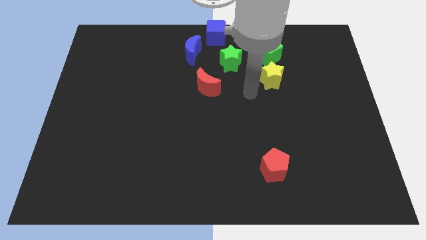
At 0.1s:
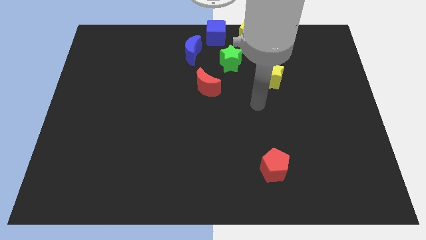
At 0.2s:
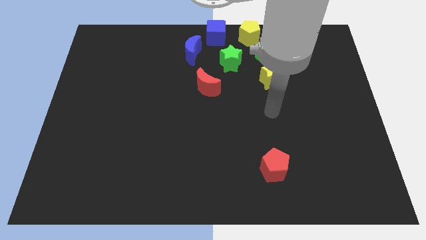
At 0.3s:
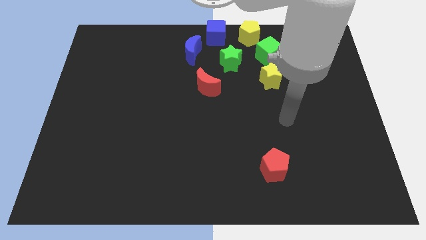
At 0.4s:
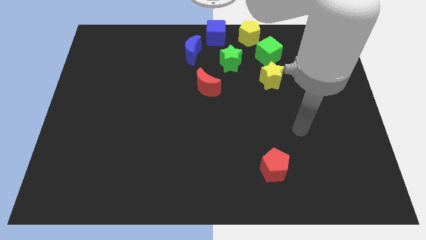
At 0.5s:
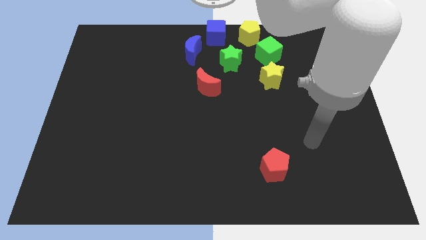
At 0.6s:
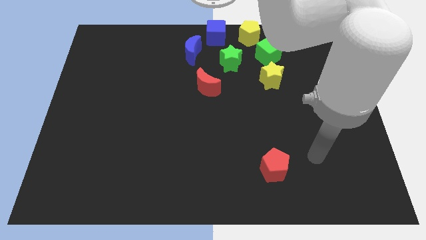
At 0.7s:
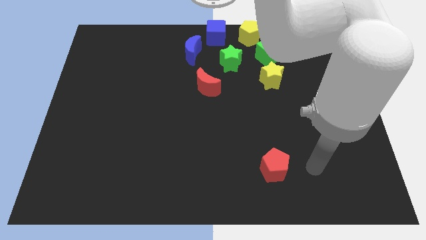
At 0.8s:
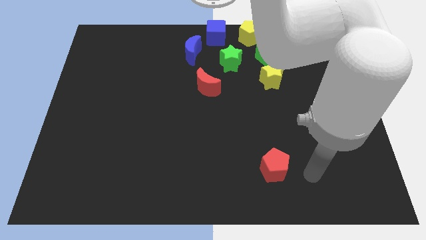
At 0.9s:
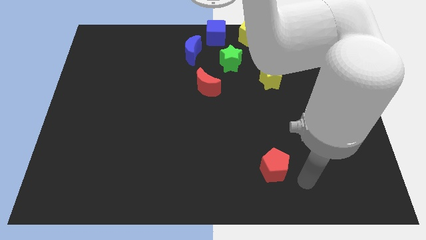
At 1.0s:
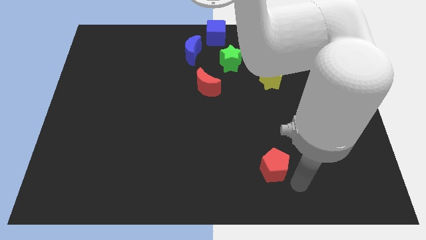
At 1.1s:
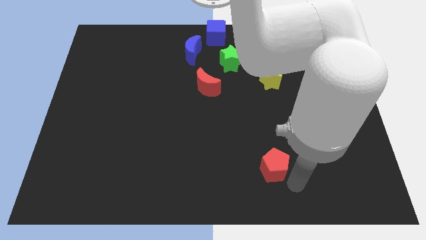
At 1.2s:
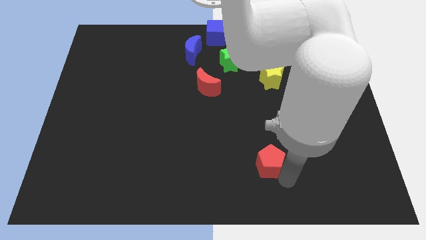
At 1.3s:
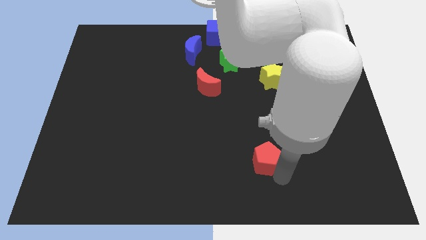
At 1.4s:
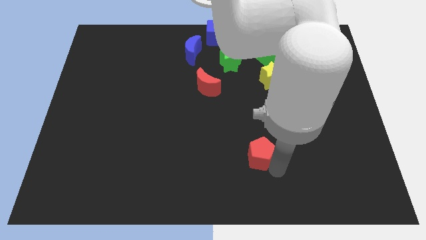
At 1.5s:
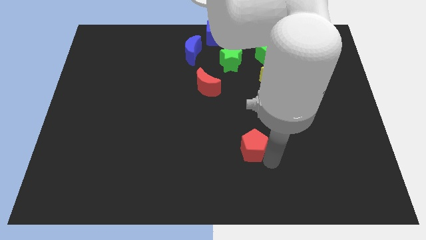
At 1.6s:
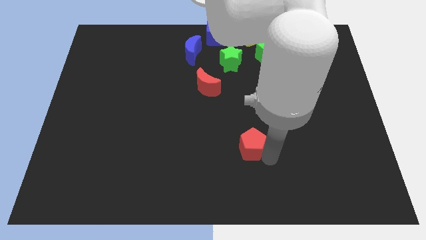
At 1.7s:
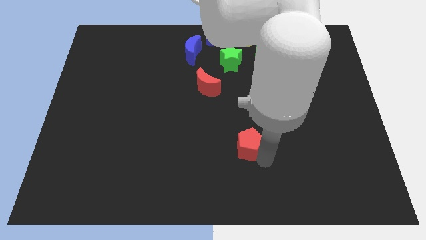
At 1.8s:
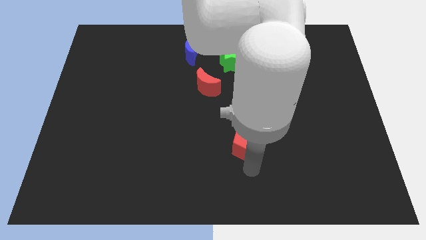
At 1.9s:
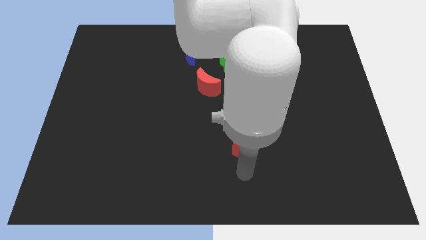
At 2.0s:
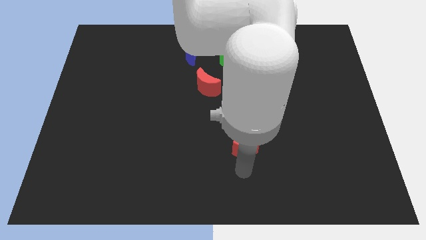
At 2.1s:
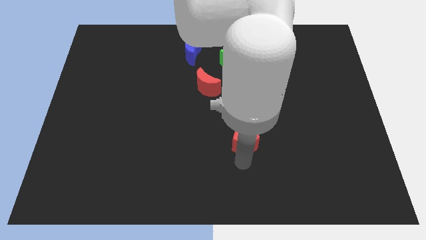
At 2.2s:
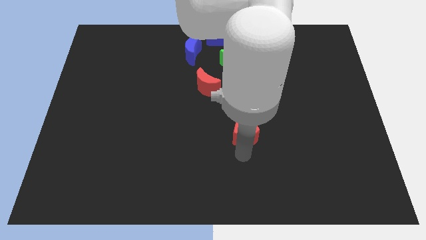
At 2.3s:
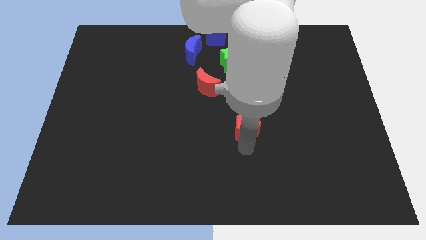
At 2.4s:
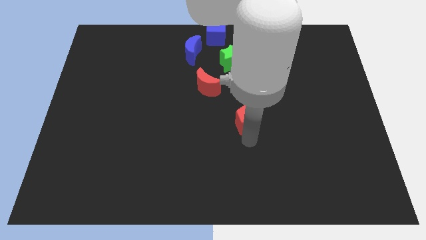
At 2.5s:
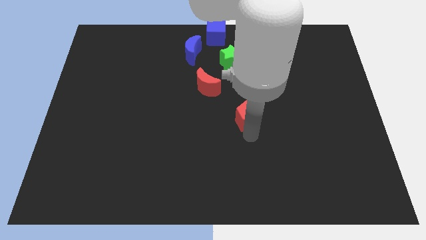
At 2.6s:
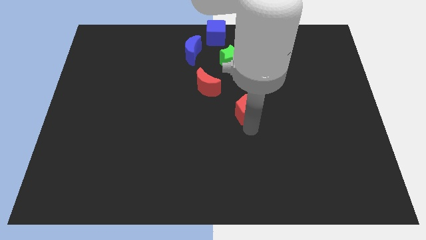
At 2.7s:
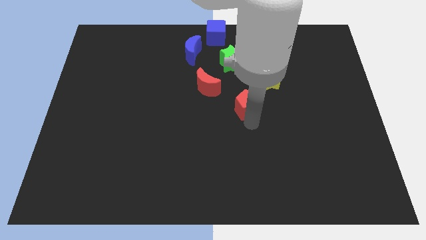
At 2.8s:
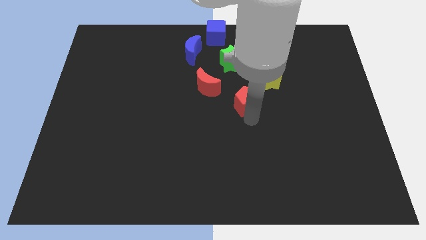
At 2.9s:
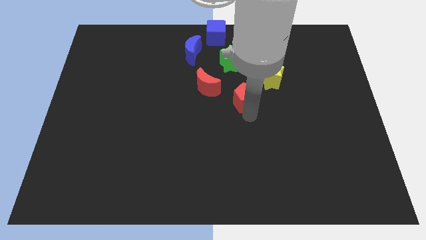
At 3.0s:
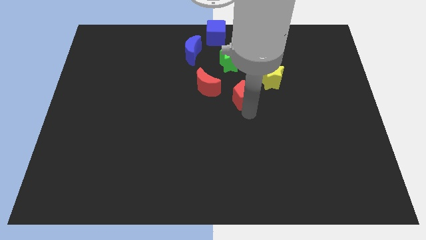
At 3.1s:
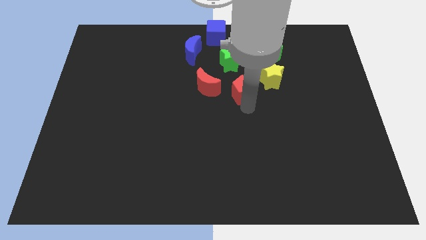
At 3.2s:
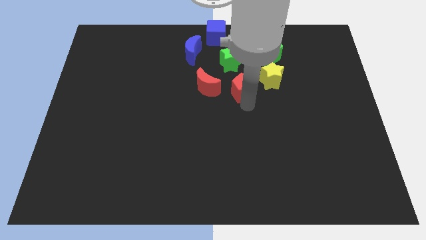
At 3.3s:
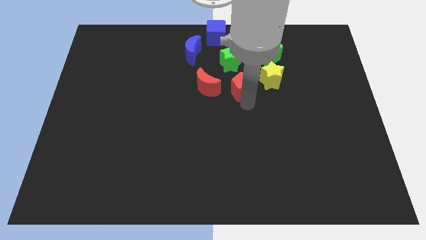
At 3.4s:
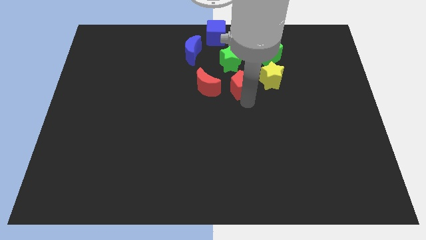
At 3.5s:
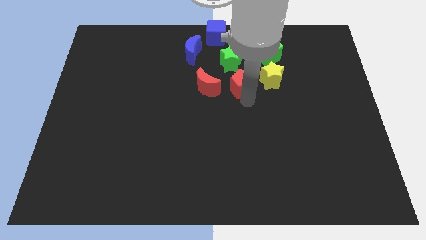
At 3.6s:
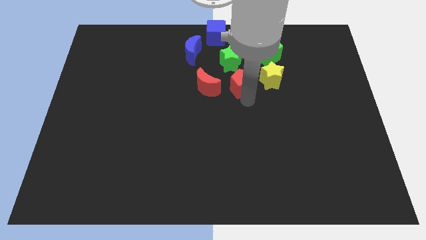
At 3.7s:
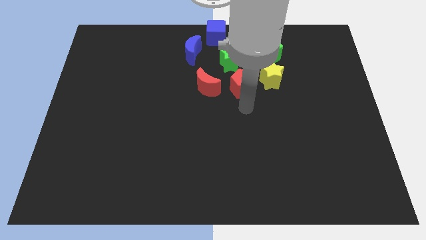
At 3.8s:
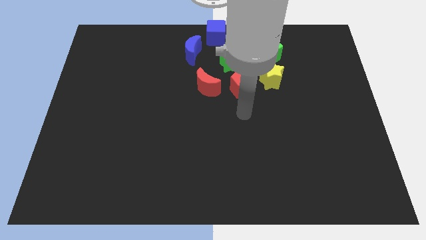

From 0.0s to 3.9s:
move the red pentagon to the right of the red crescent

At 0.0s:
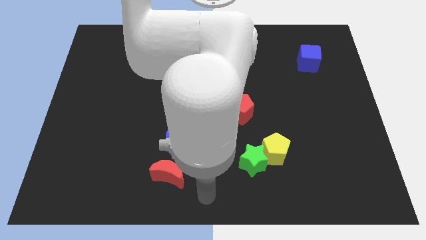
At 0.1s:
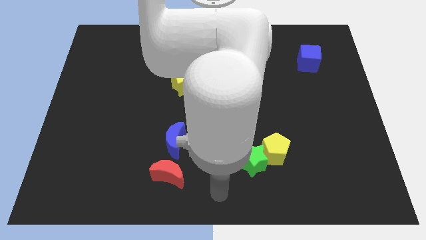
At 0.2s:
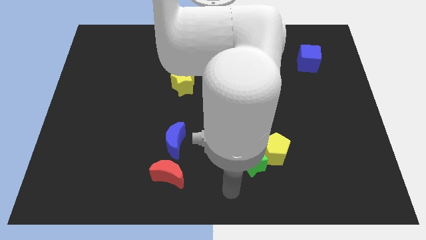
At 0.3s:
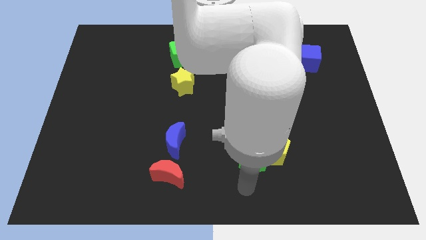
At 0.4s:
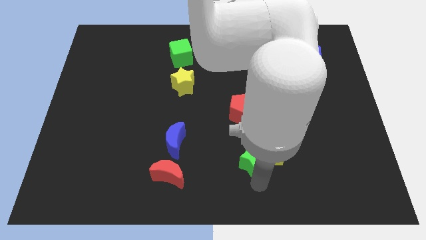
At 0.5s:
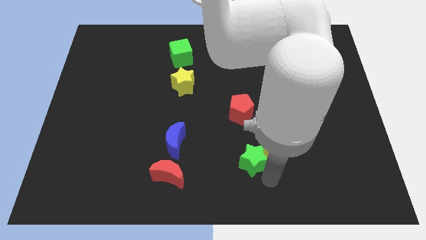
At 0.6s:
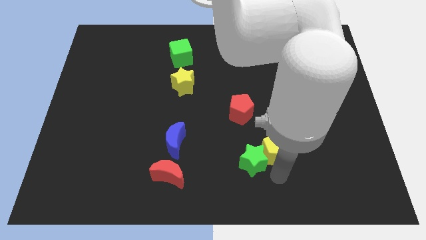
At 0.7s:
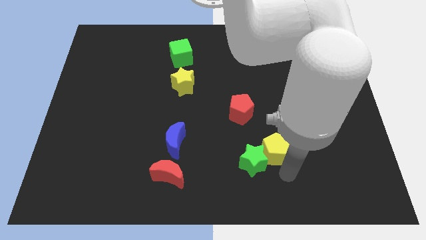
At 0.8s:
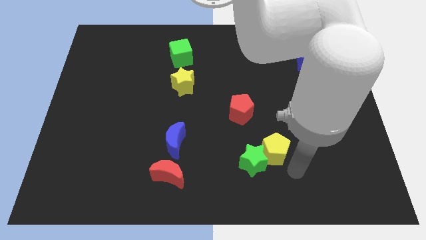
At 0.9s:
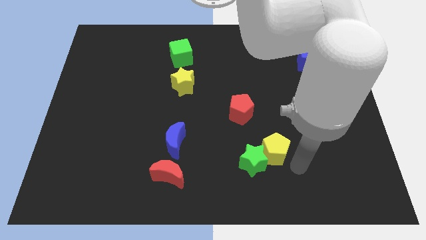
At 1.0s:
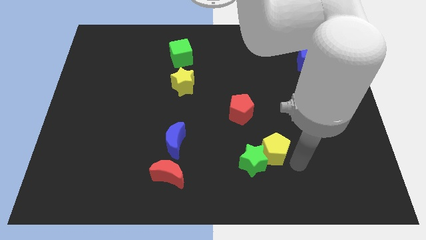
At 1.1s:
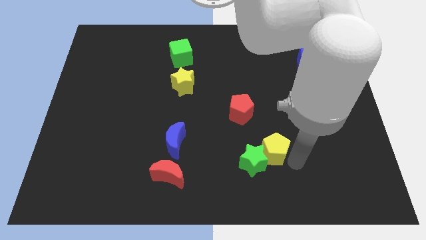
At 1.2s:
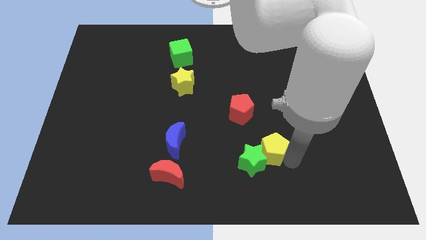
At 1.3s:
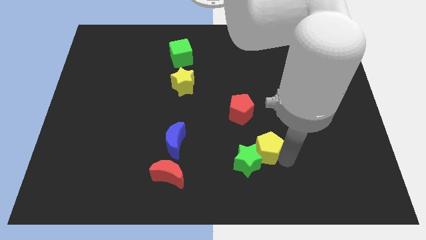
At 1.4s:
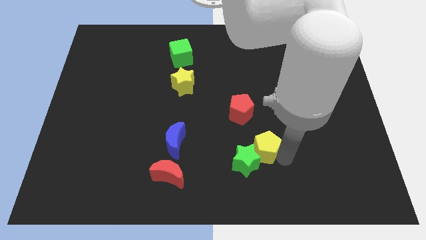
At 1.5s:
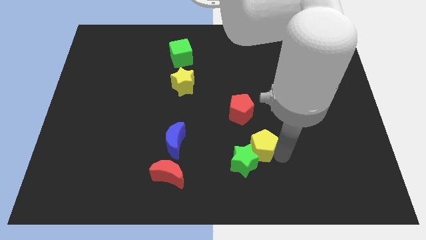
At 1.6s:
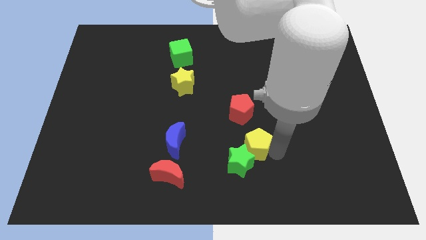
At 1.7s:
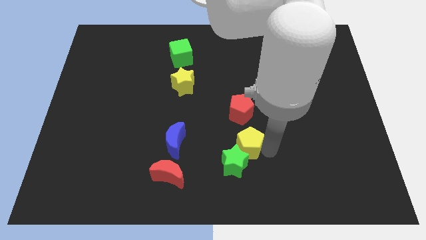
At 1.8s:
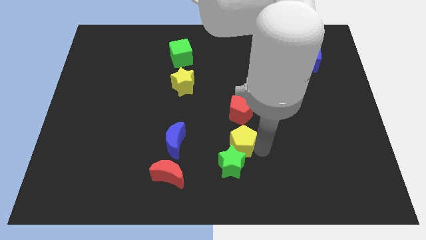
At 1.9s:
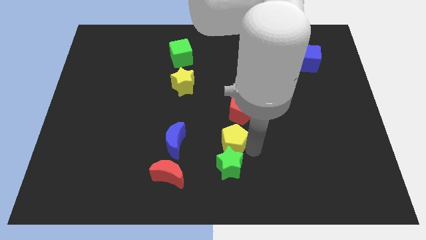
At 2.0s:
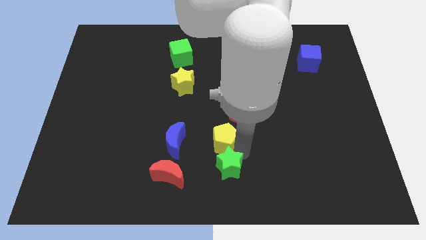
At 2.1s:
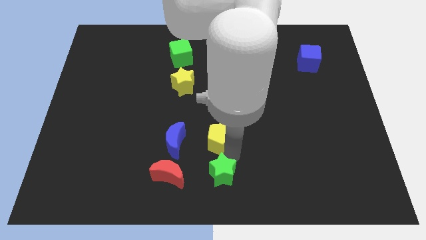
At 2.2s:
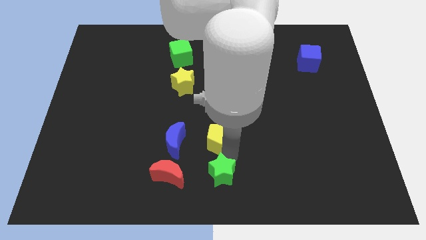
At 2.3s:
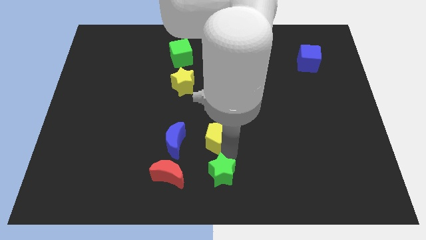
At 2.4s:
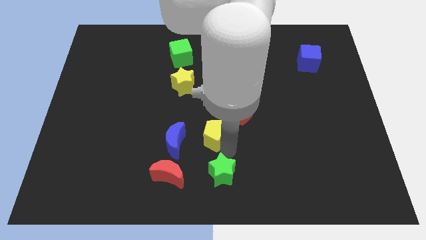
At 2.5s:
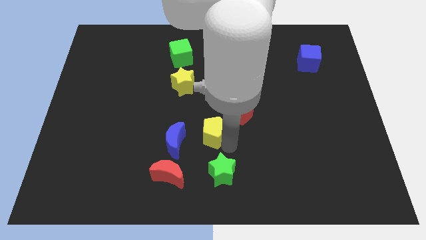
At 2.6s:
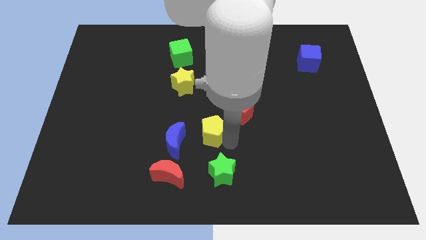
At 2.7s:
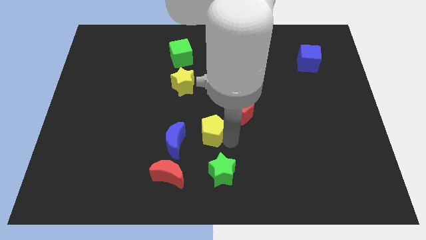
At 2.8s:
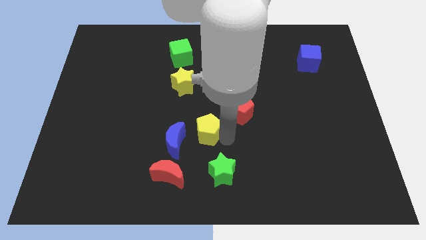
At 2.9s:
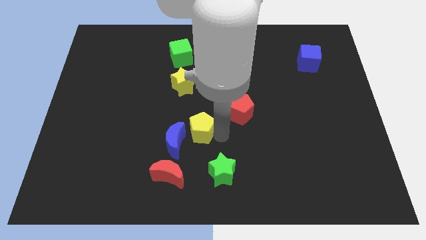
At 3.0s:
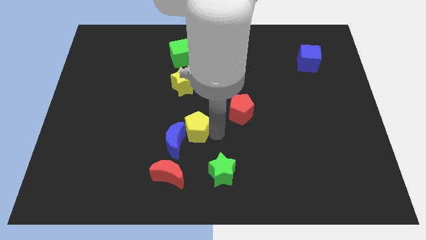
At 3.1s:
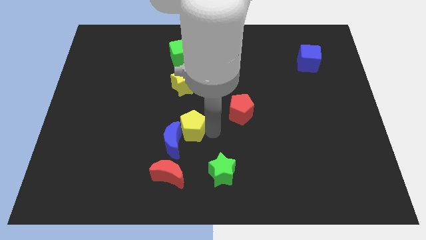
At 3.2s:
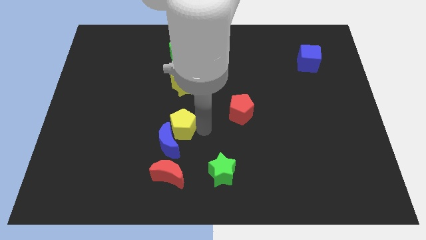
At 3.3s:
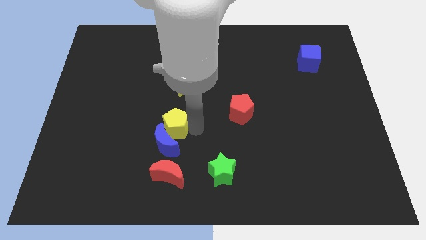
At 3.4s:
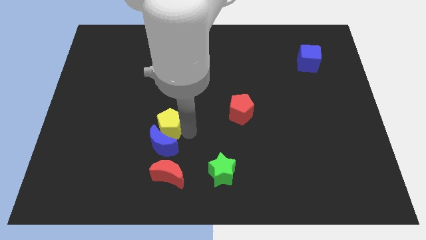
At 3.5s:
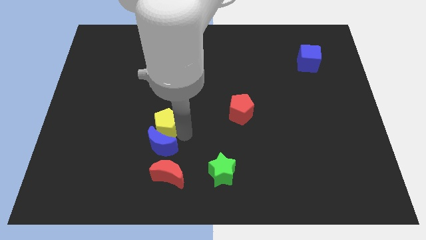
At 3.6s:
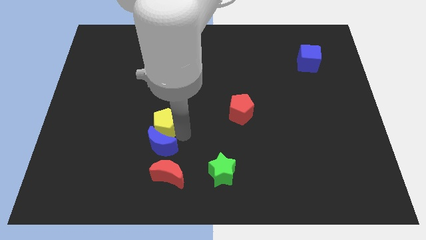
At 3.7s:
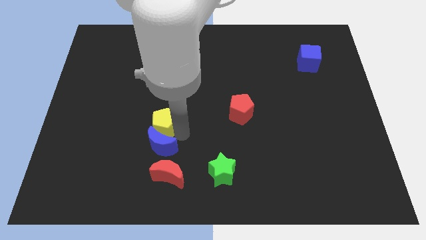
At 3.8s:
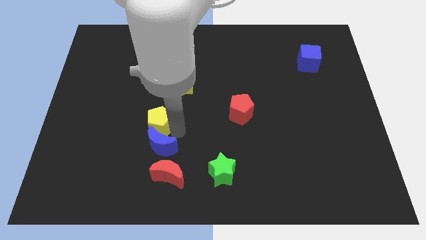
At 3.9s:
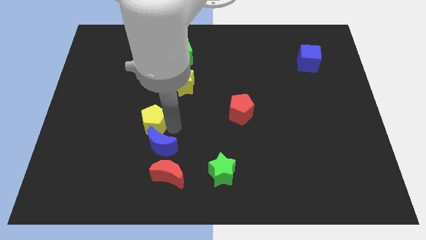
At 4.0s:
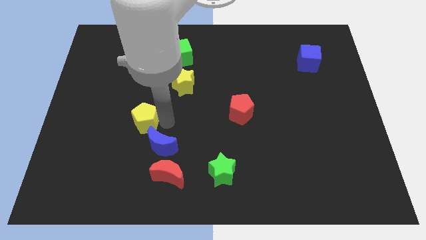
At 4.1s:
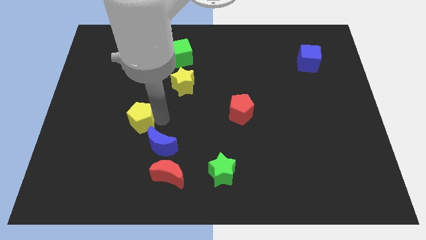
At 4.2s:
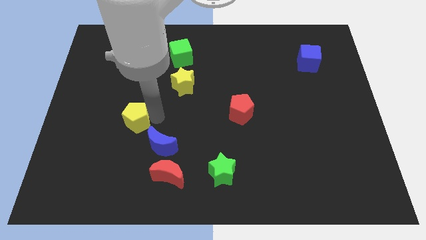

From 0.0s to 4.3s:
separate the yellow pentagon from the green star towards left

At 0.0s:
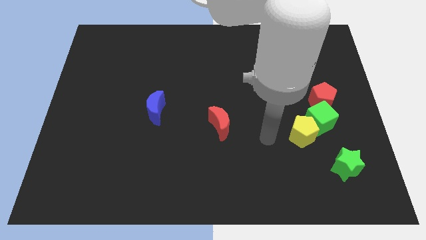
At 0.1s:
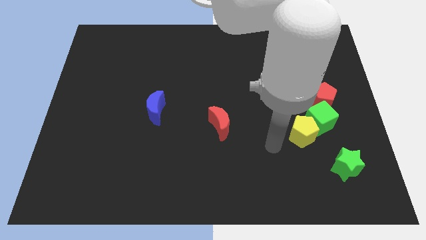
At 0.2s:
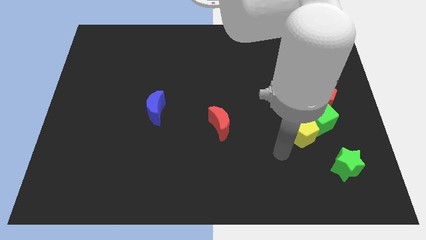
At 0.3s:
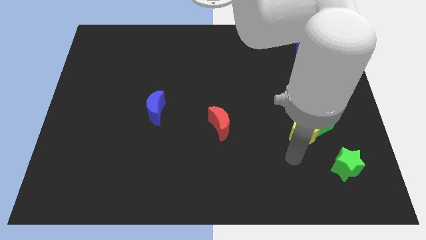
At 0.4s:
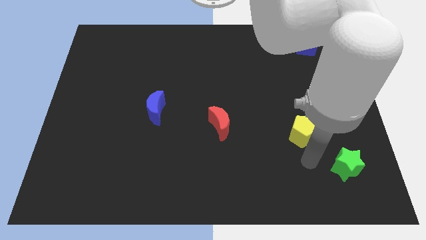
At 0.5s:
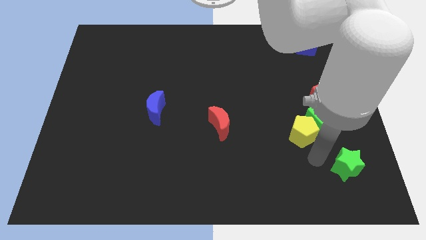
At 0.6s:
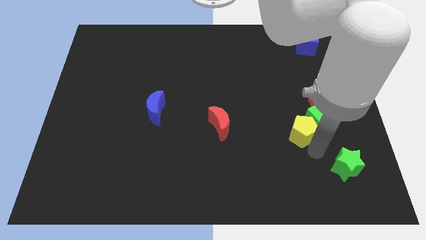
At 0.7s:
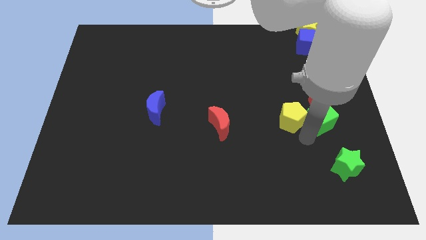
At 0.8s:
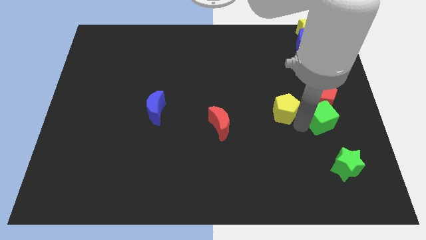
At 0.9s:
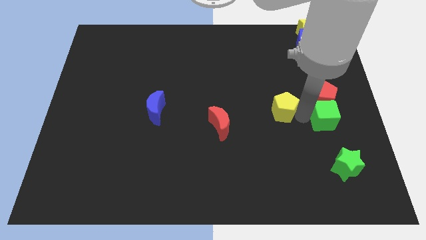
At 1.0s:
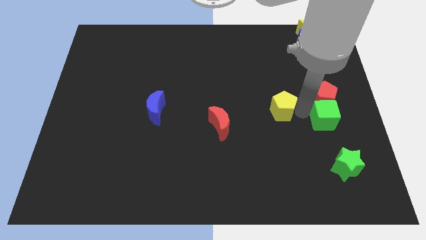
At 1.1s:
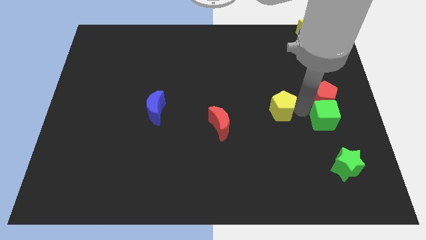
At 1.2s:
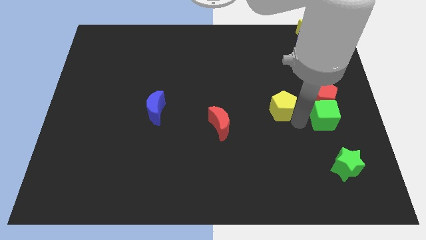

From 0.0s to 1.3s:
separate the yellow pentagon and green cube
